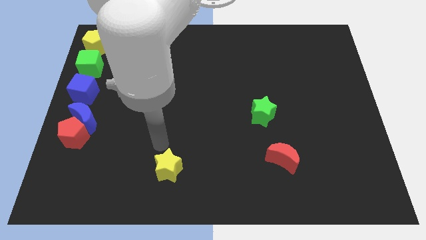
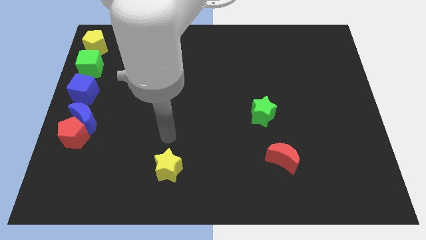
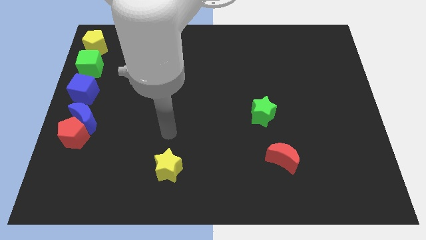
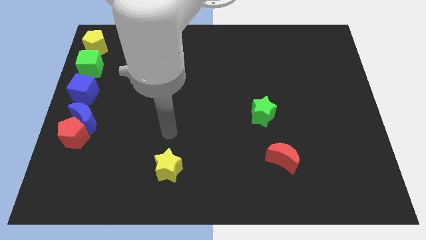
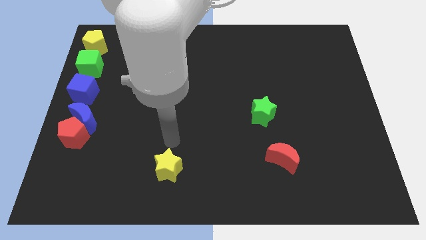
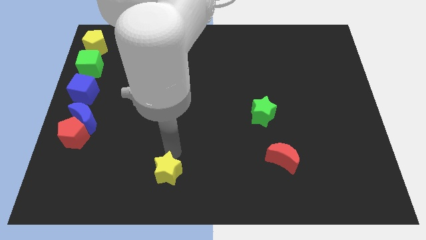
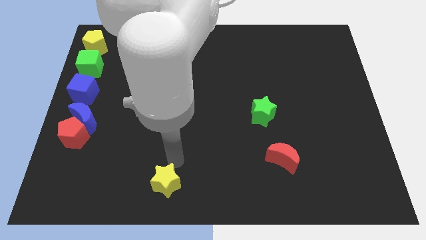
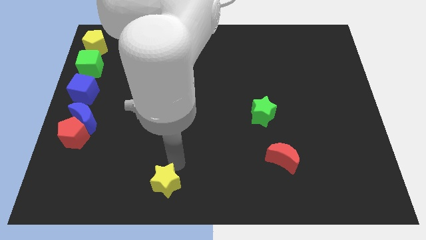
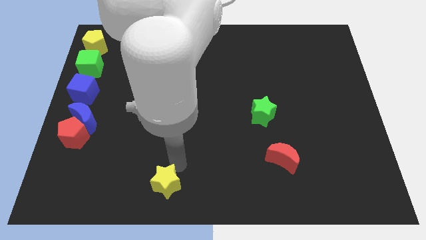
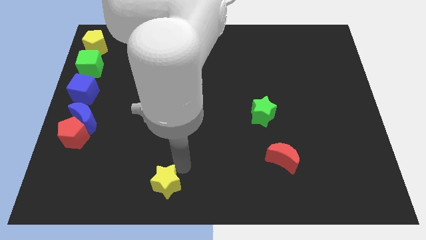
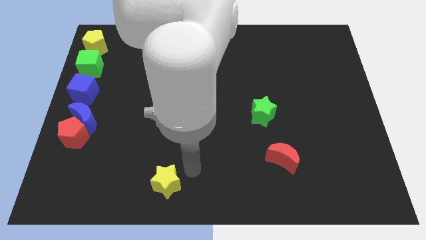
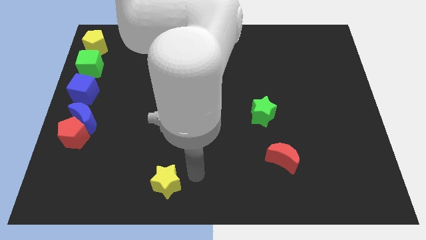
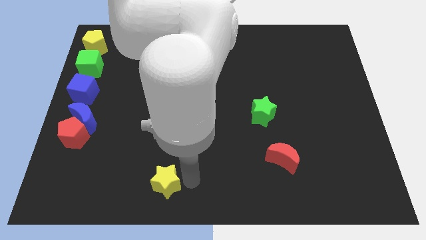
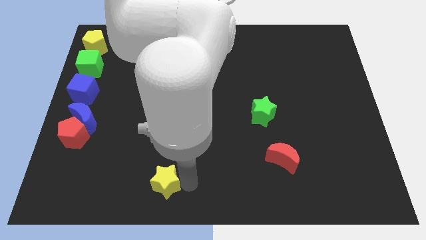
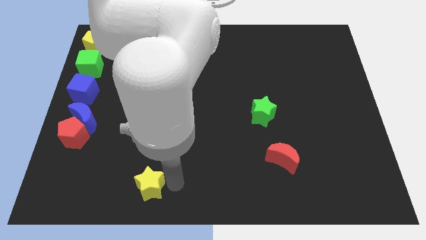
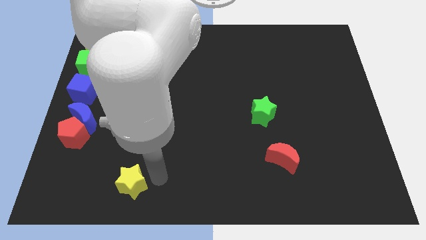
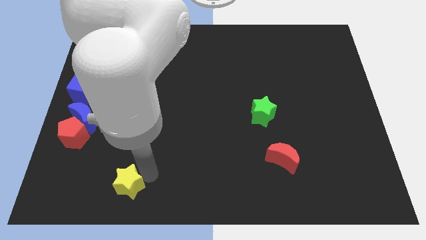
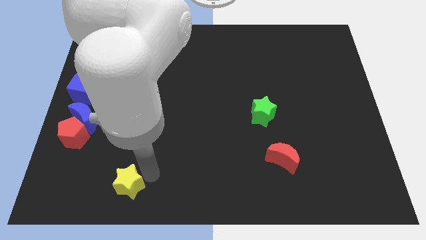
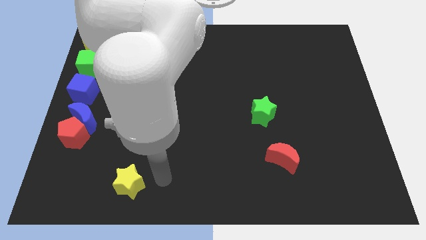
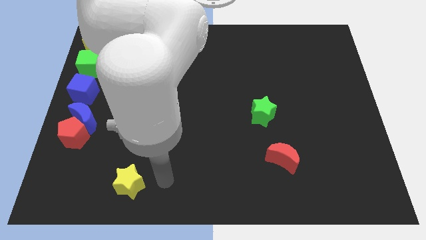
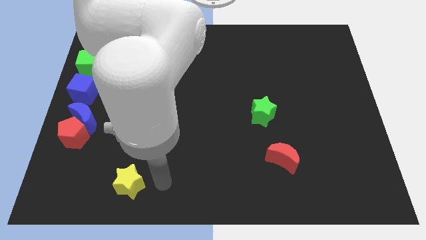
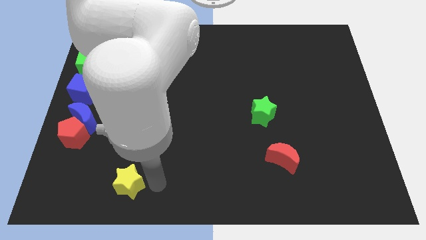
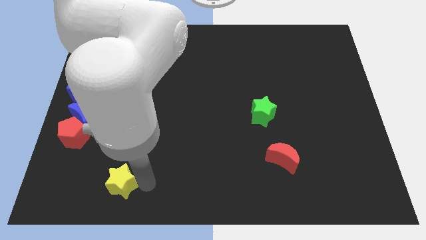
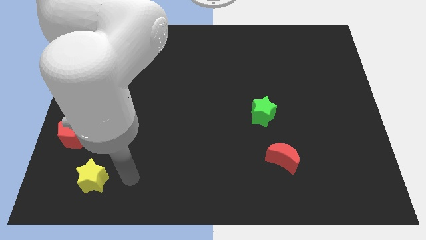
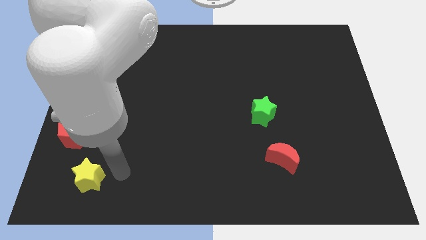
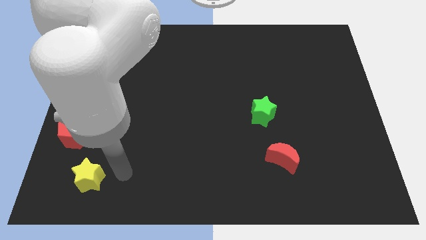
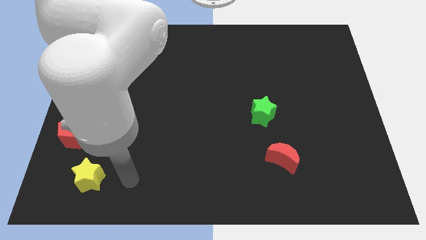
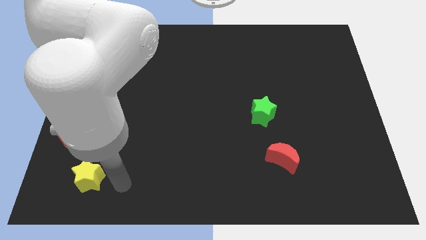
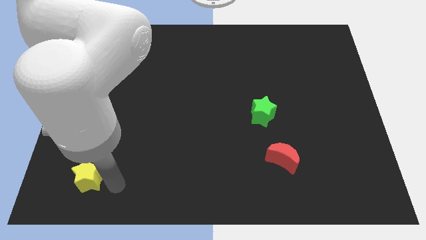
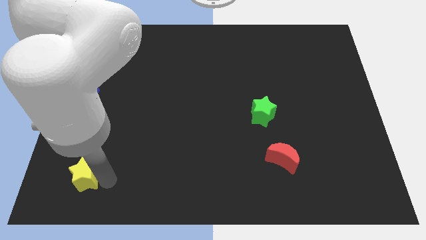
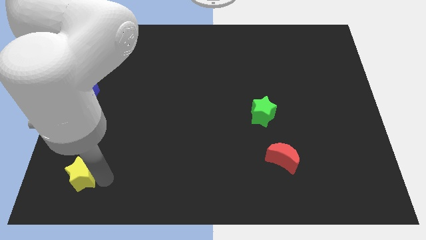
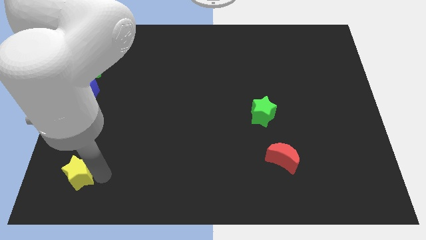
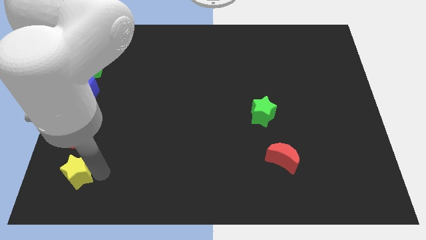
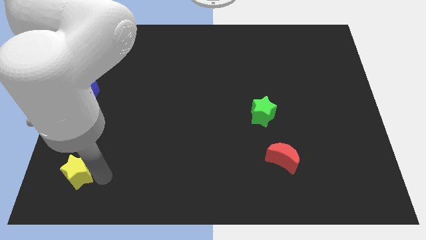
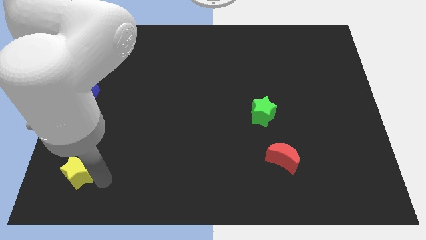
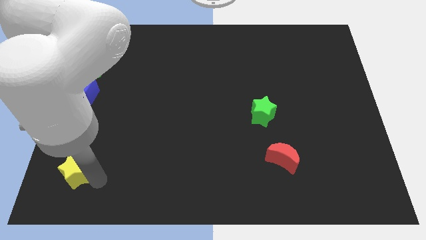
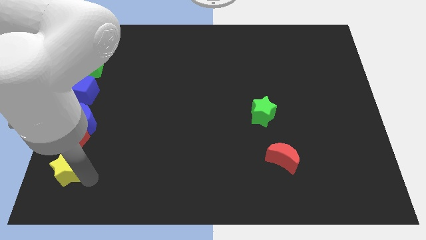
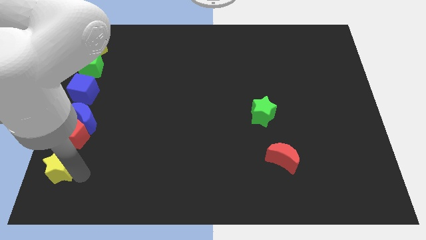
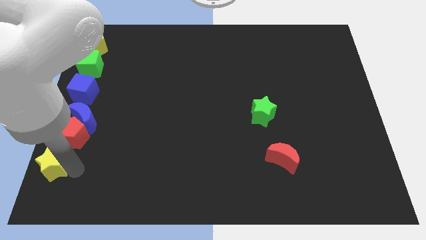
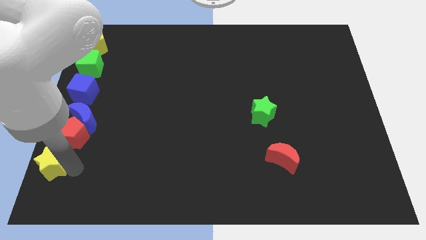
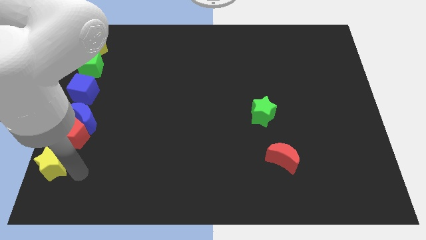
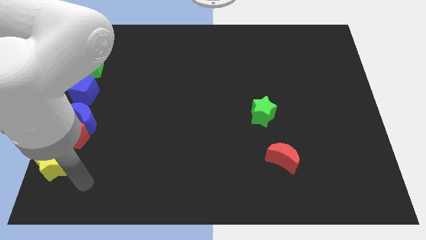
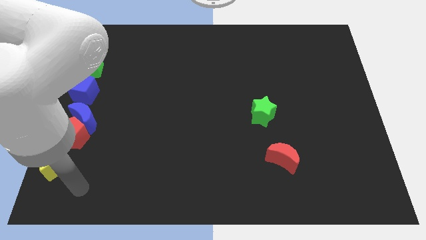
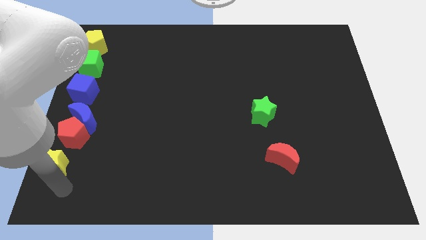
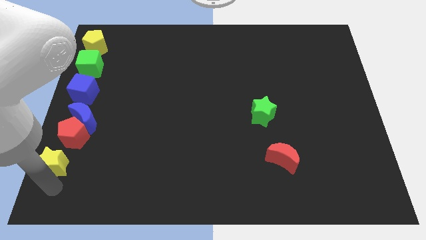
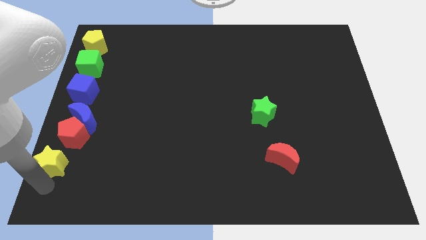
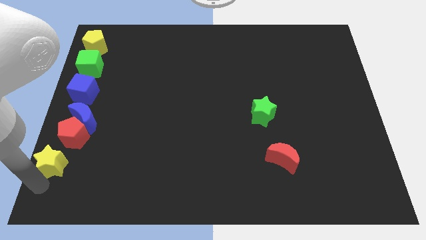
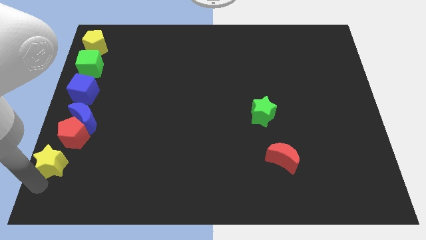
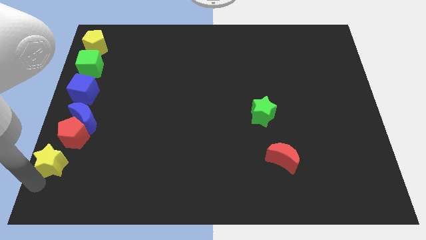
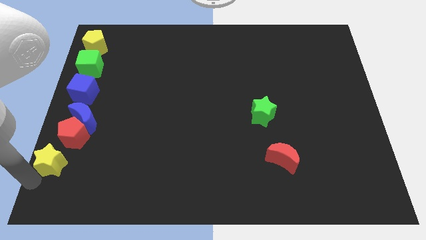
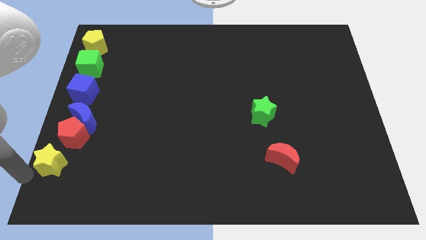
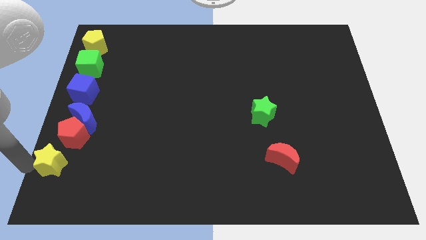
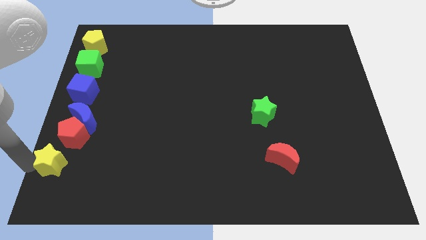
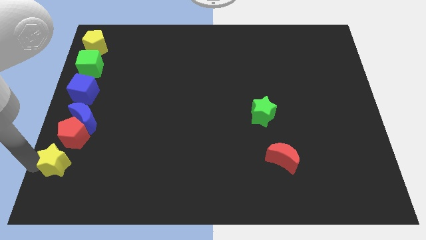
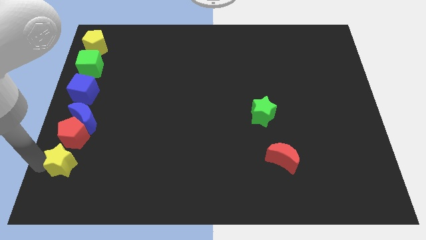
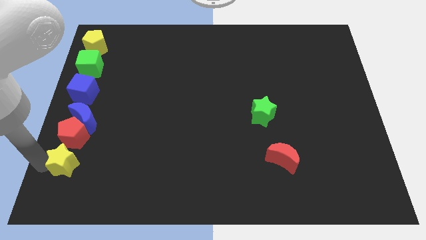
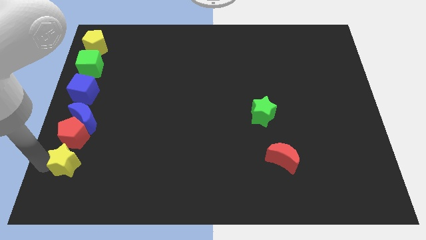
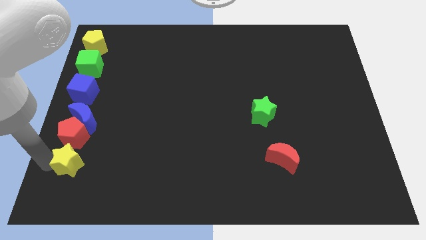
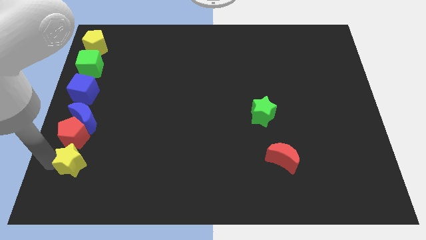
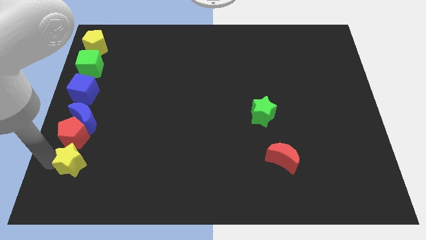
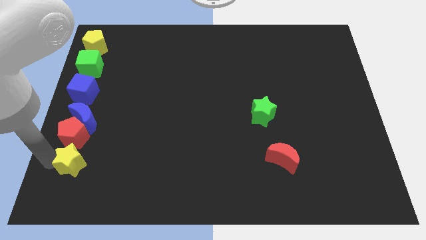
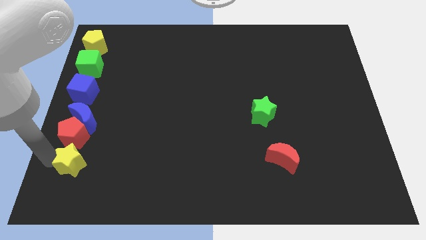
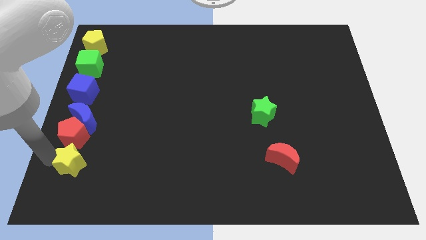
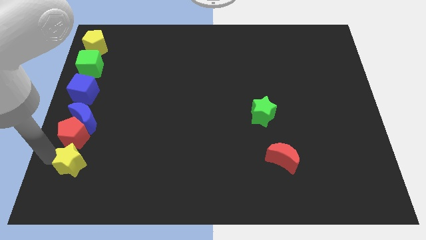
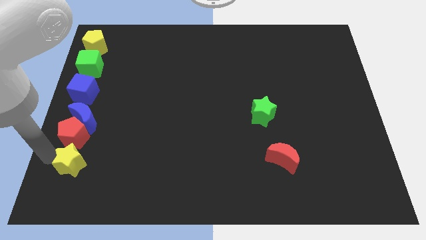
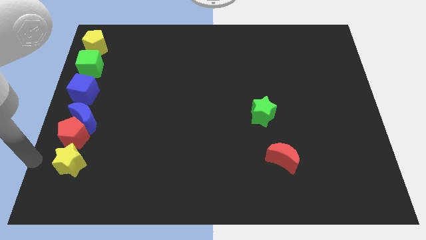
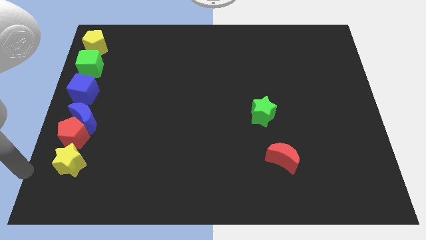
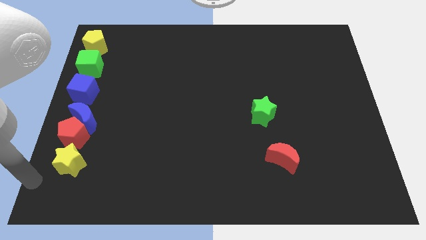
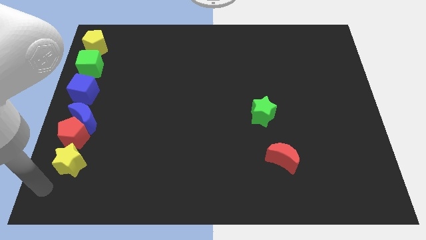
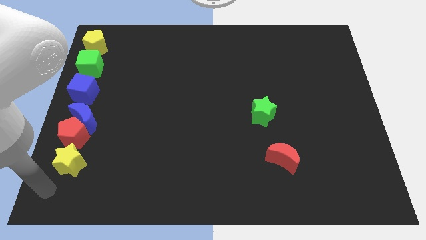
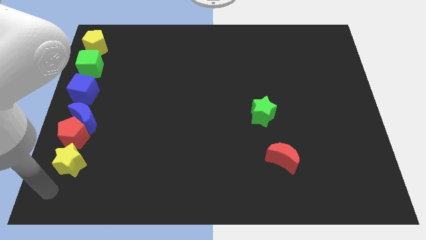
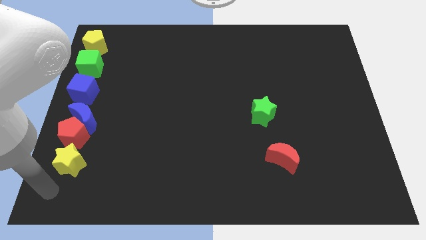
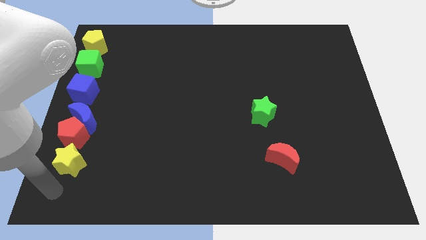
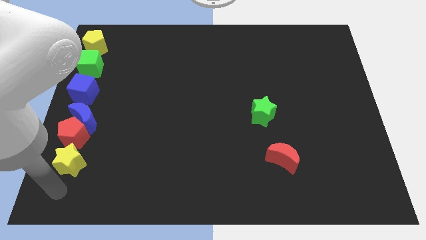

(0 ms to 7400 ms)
place the yellow star below the red pentagon

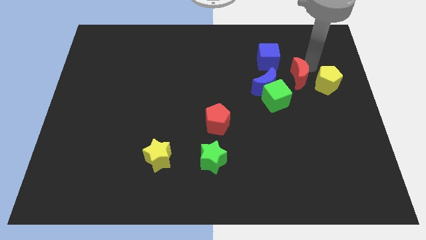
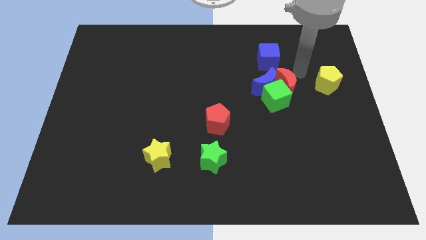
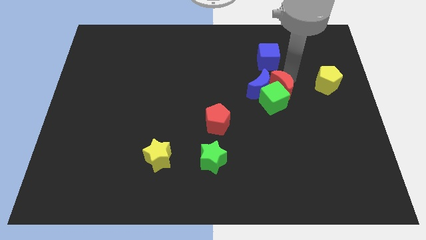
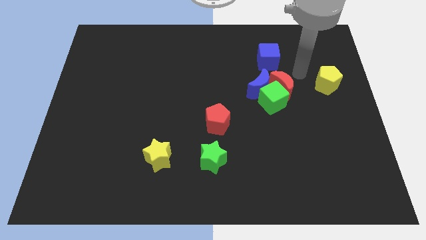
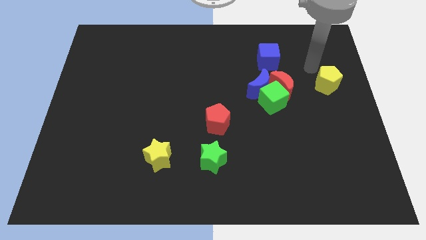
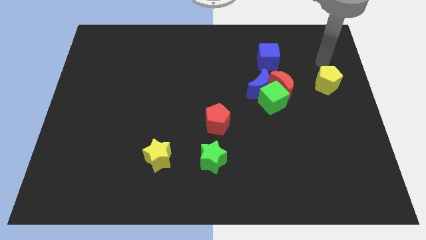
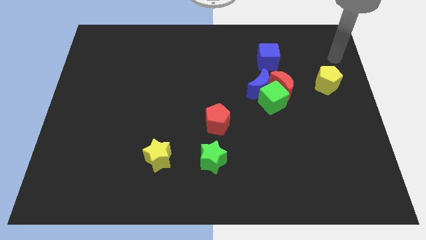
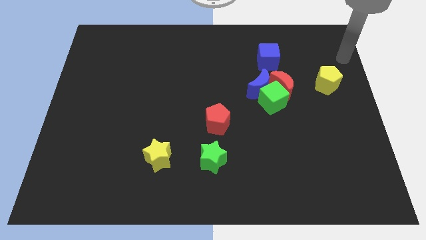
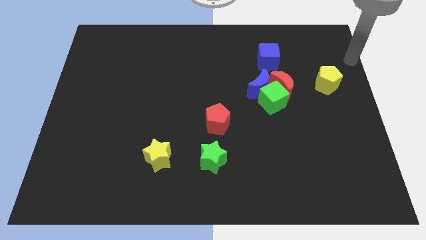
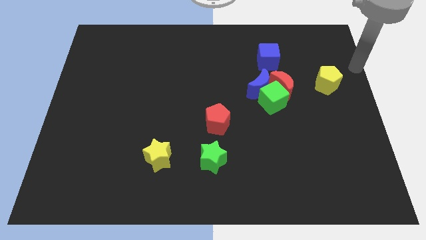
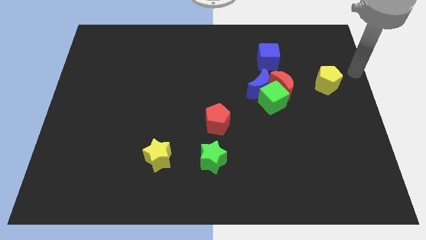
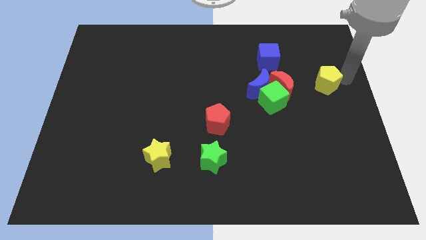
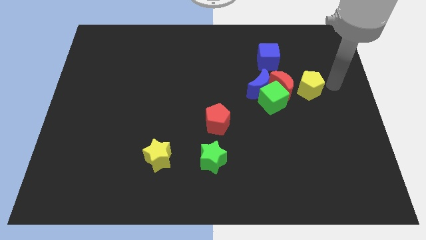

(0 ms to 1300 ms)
push the red moon into the green cube
